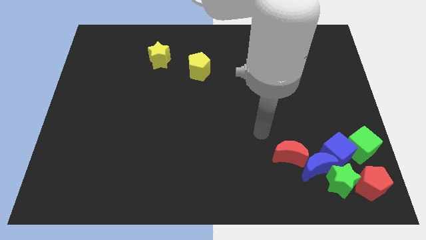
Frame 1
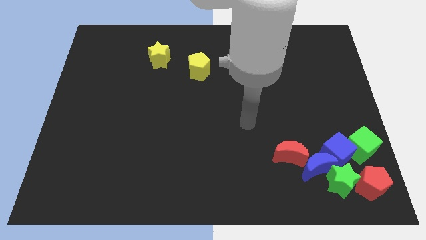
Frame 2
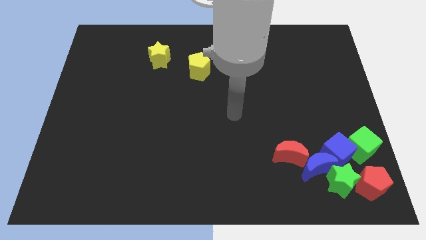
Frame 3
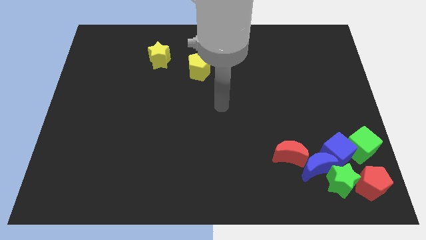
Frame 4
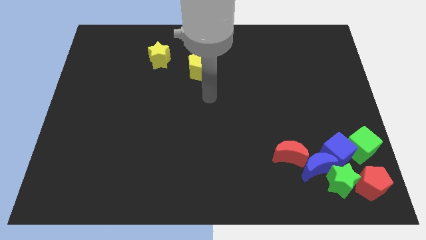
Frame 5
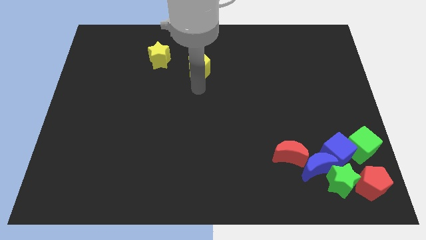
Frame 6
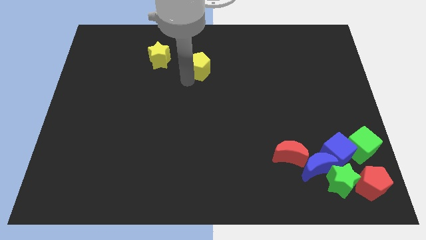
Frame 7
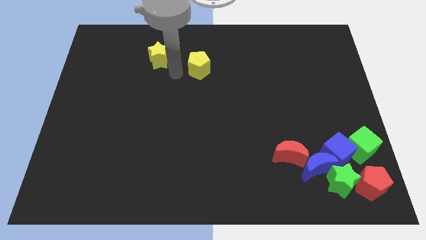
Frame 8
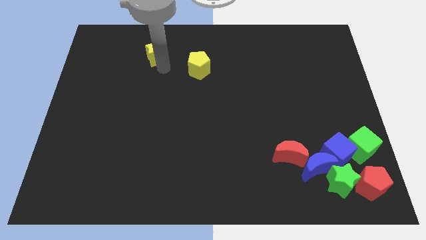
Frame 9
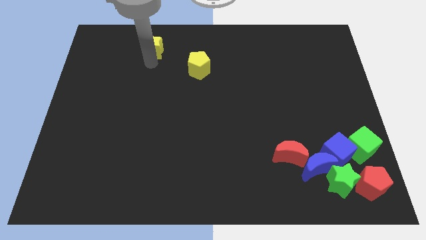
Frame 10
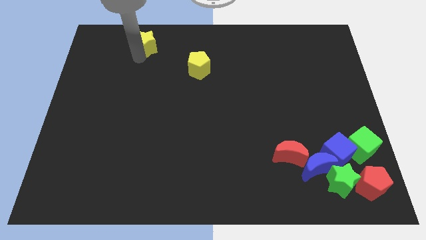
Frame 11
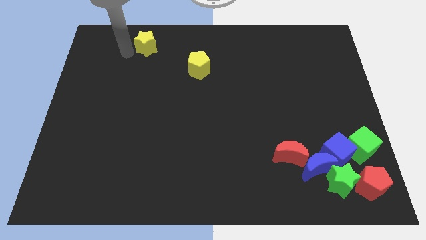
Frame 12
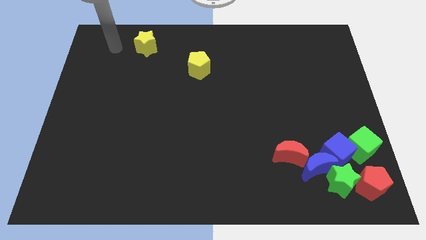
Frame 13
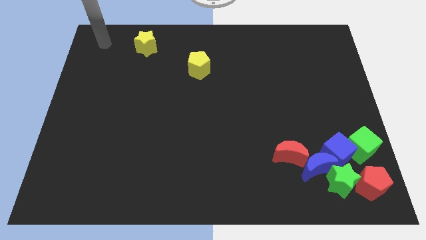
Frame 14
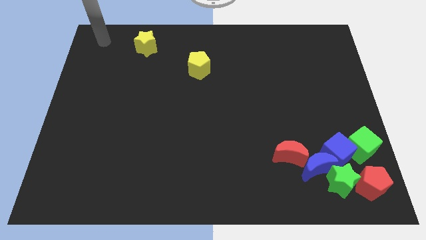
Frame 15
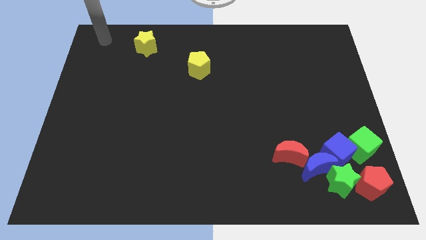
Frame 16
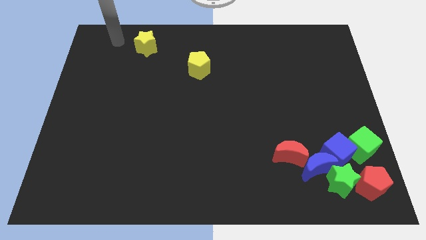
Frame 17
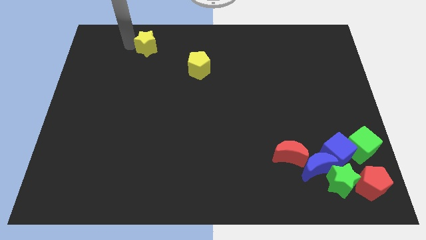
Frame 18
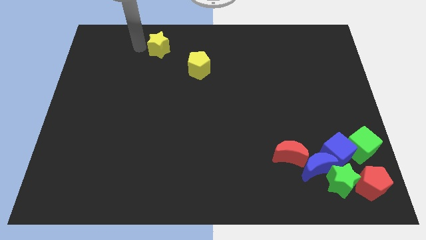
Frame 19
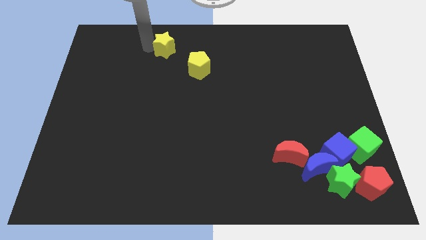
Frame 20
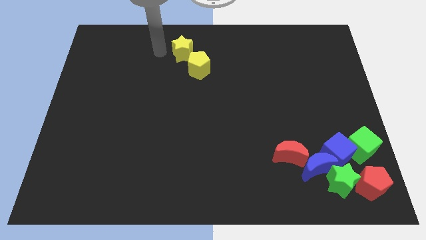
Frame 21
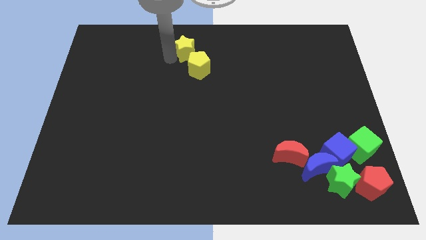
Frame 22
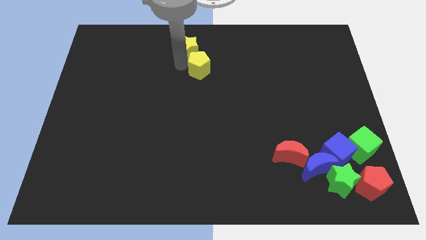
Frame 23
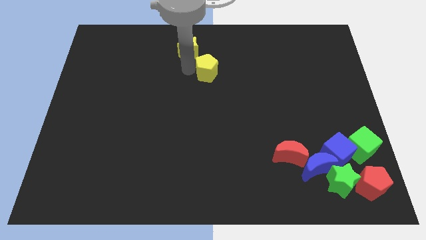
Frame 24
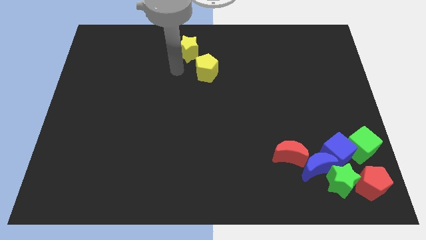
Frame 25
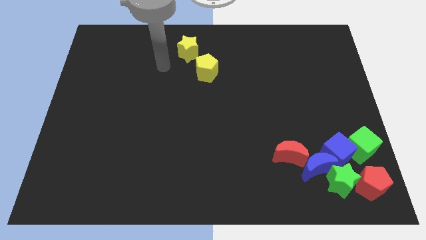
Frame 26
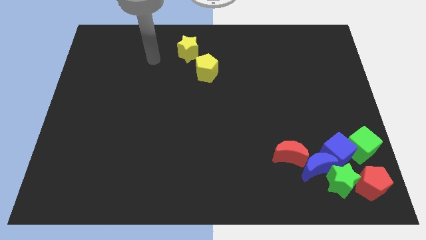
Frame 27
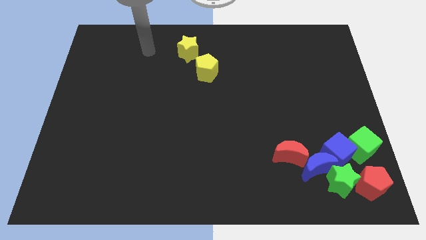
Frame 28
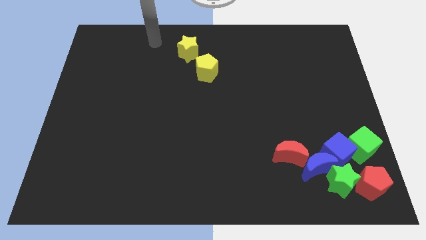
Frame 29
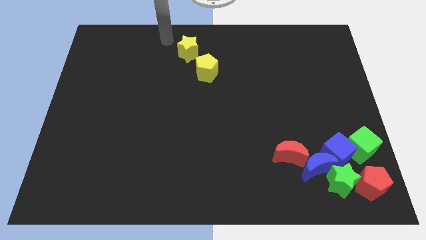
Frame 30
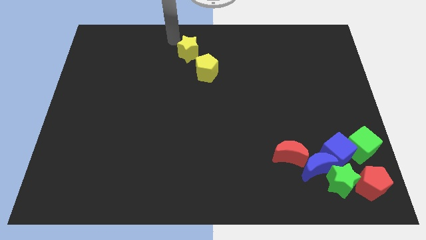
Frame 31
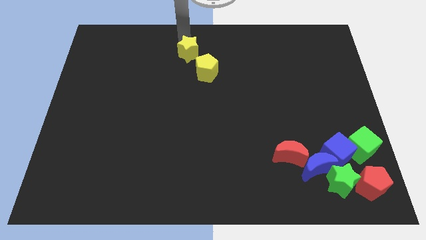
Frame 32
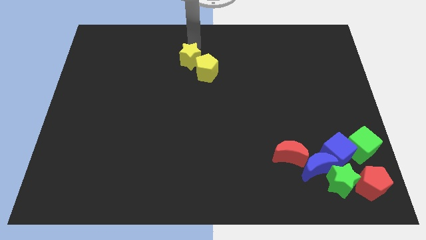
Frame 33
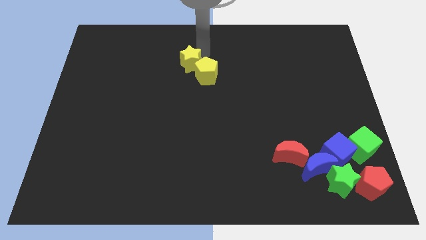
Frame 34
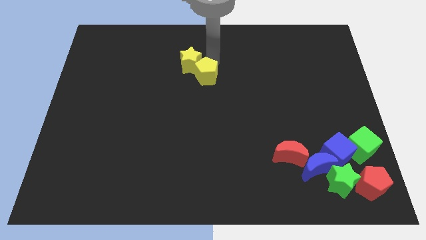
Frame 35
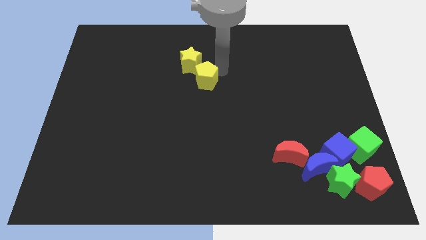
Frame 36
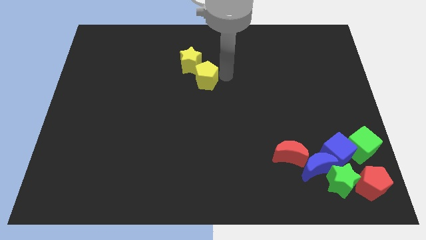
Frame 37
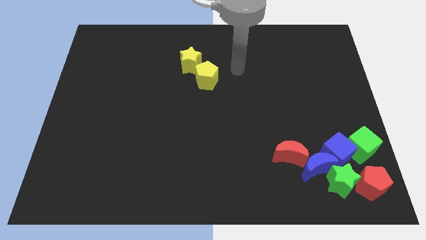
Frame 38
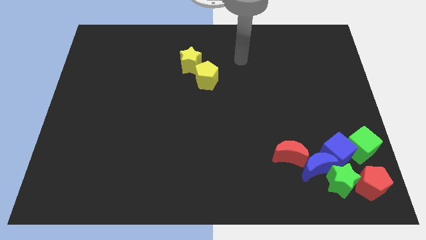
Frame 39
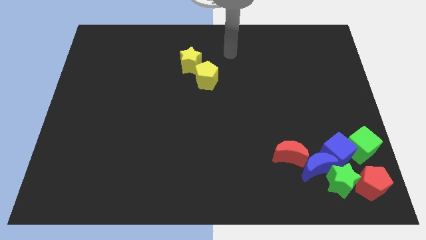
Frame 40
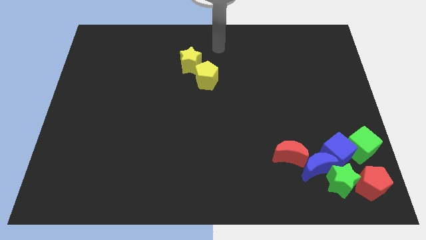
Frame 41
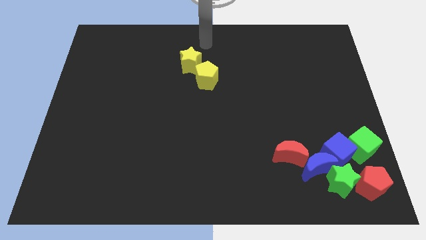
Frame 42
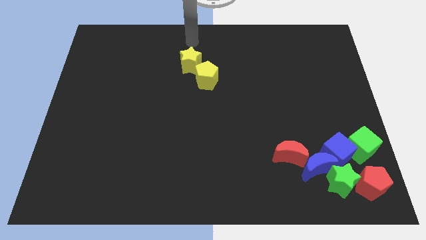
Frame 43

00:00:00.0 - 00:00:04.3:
place the yellow blocks to the top side center

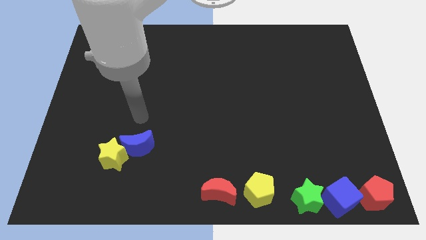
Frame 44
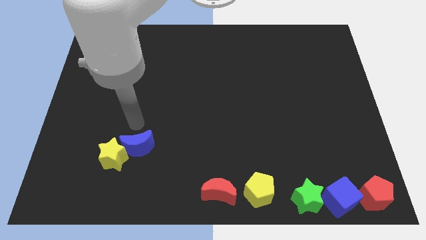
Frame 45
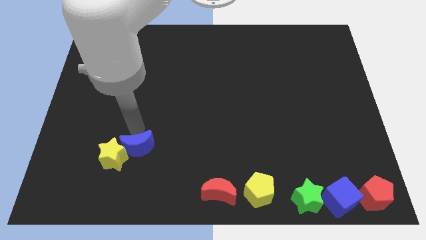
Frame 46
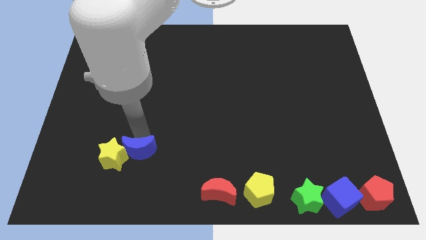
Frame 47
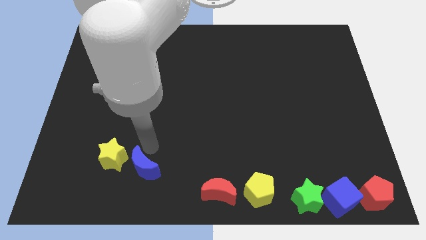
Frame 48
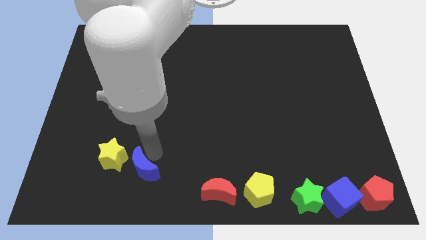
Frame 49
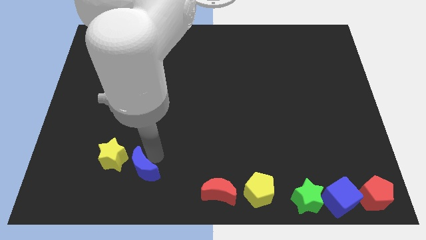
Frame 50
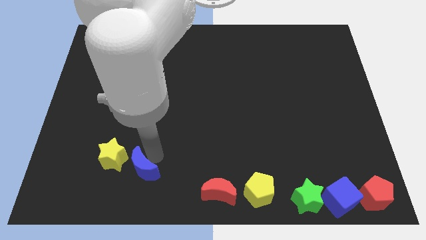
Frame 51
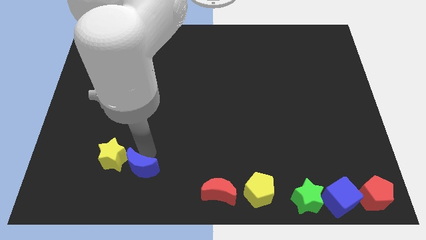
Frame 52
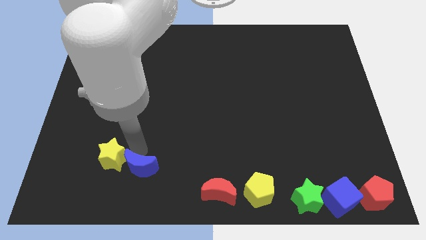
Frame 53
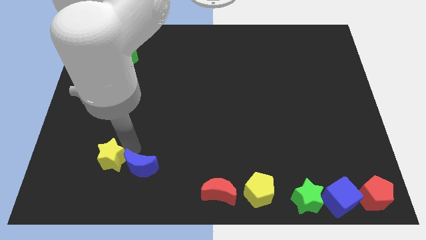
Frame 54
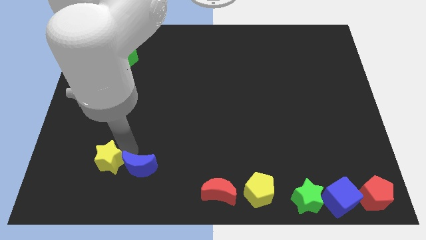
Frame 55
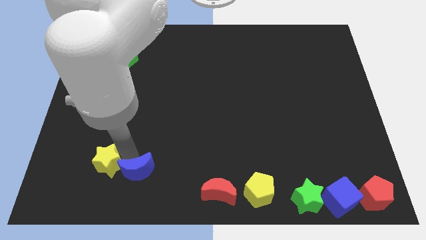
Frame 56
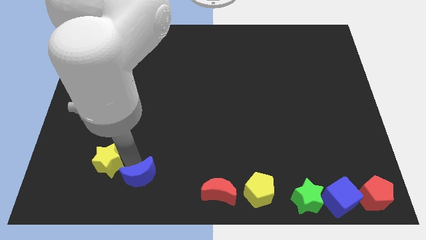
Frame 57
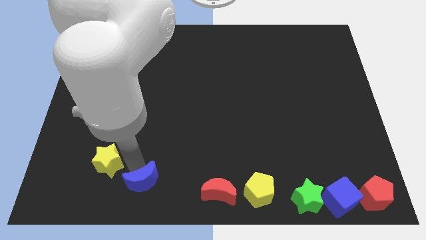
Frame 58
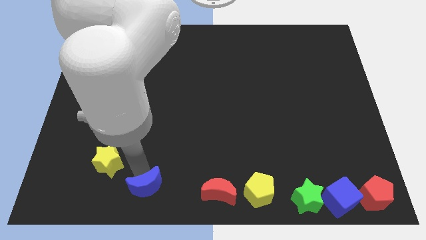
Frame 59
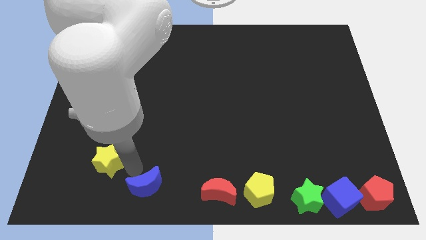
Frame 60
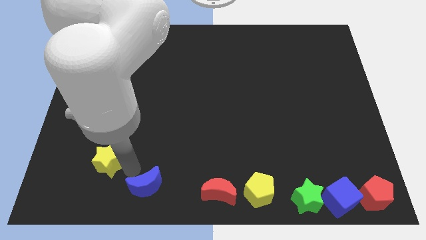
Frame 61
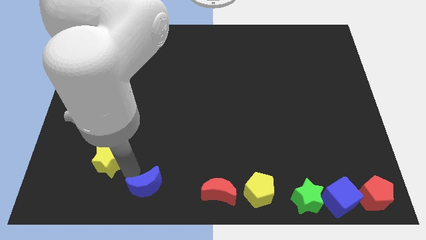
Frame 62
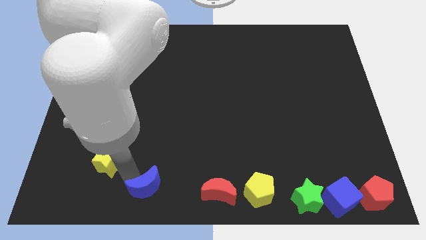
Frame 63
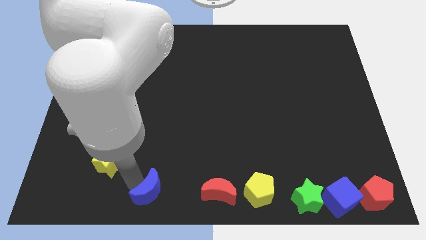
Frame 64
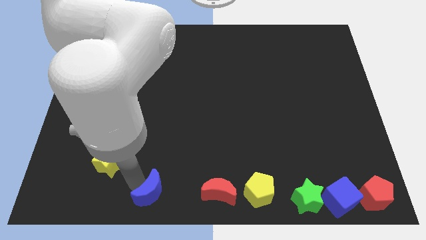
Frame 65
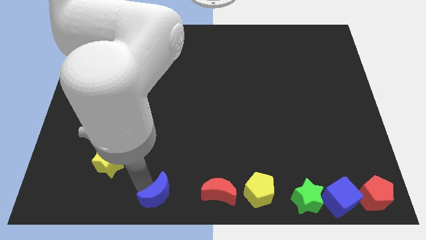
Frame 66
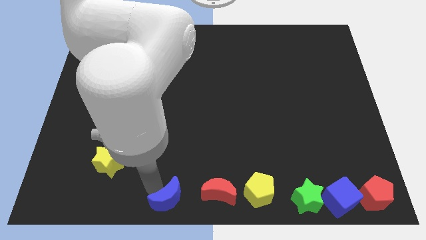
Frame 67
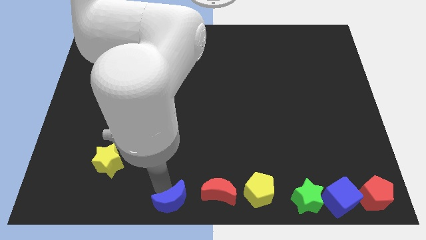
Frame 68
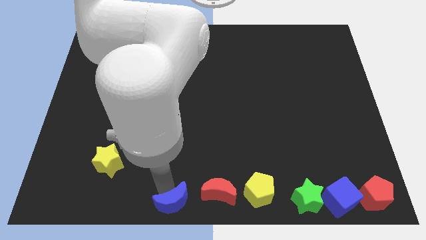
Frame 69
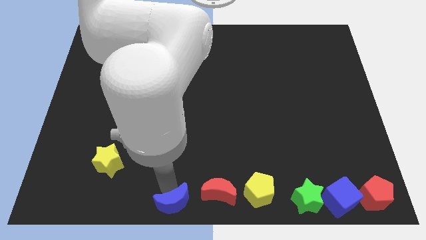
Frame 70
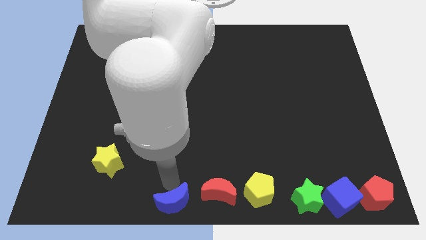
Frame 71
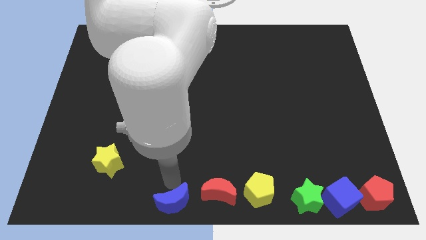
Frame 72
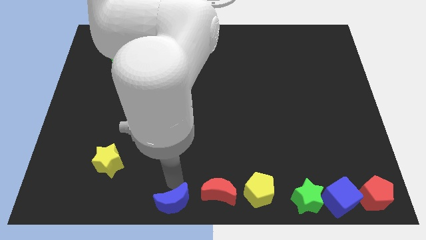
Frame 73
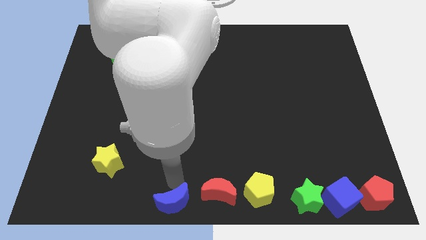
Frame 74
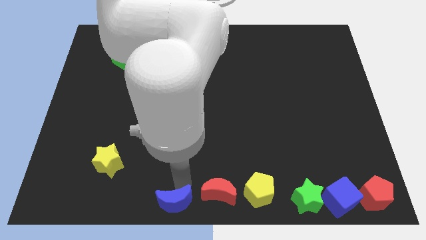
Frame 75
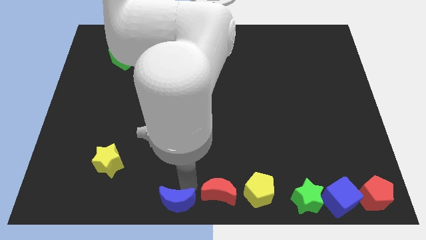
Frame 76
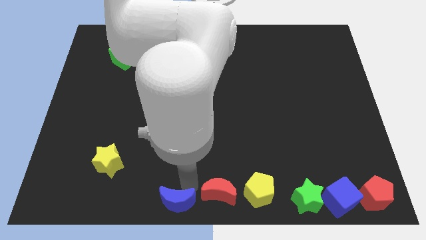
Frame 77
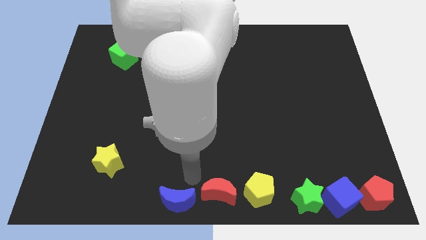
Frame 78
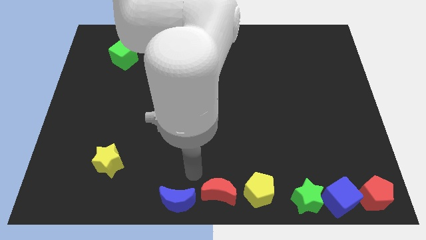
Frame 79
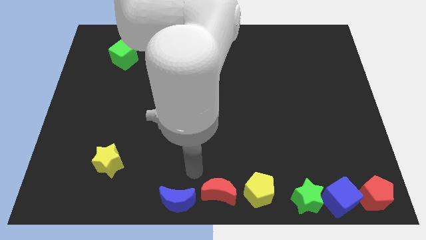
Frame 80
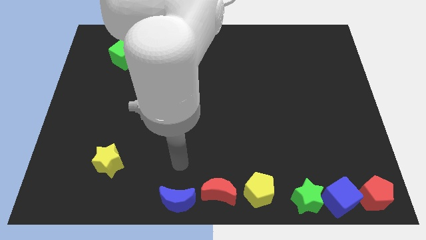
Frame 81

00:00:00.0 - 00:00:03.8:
place the blue crescent close to the red crescent

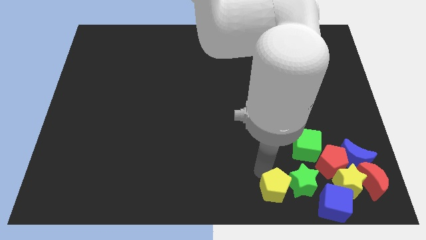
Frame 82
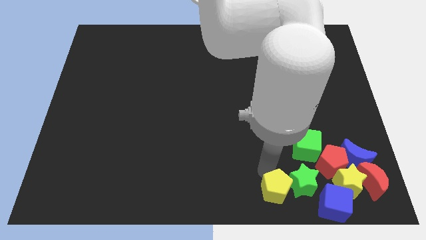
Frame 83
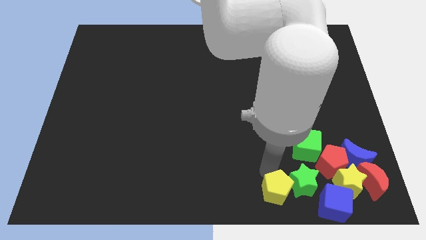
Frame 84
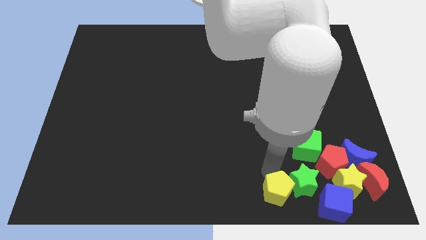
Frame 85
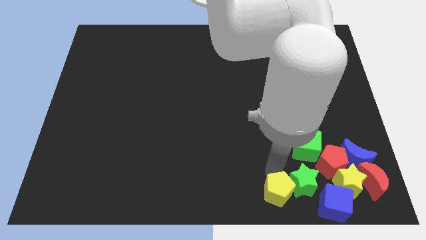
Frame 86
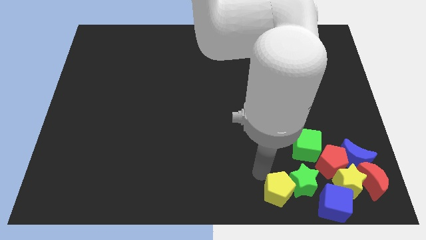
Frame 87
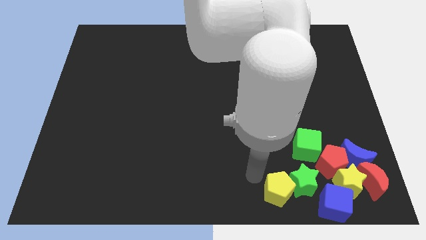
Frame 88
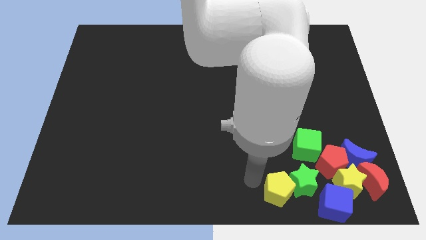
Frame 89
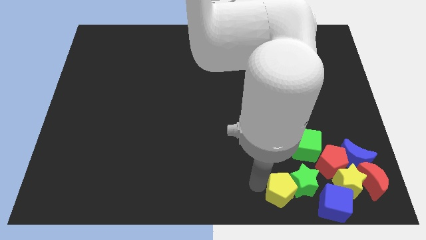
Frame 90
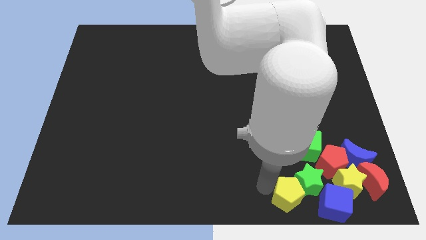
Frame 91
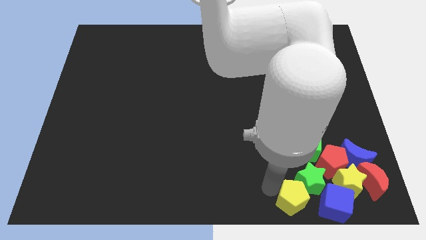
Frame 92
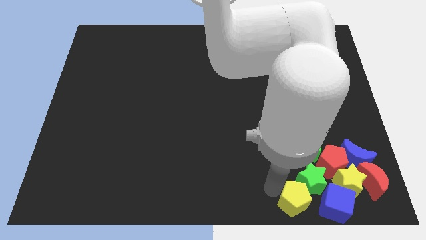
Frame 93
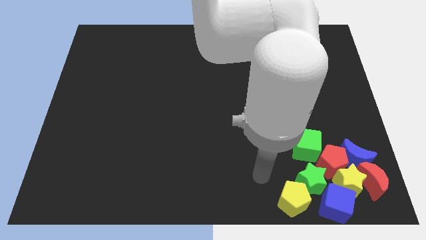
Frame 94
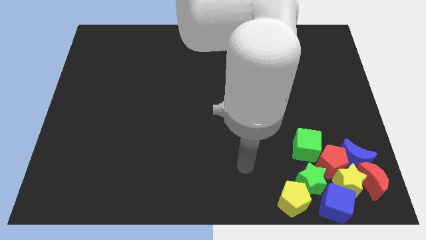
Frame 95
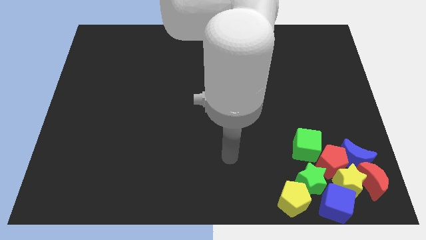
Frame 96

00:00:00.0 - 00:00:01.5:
move the yellow pentagon into the green star
